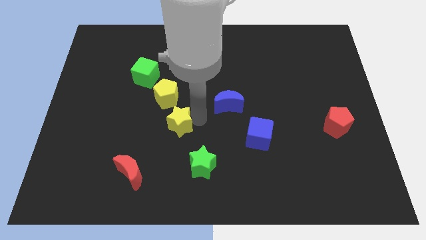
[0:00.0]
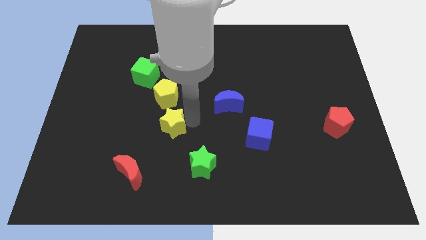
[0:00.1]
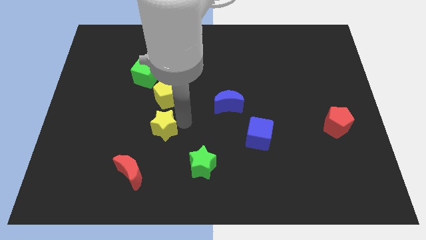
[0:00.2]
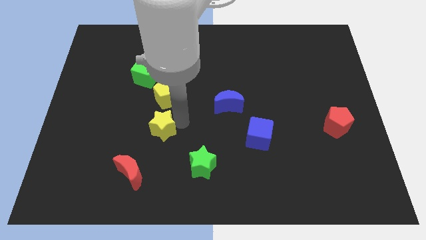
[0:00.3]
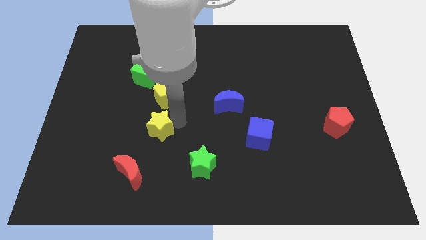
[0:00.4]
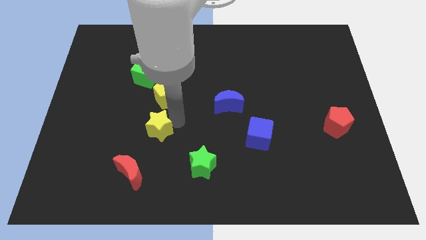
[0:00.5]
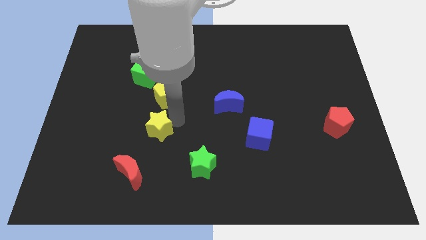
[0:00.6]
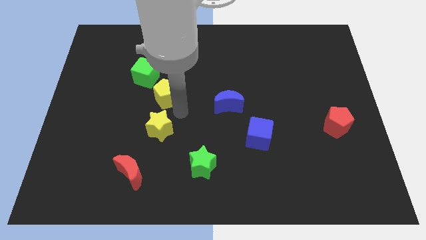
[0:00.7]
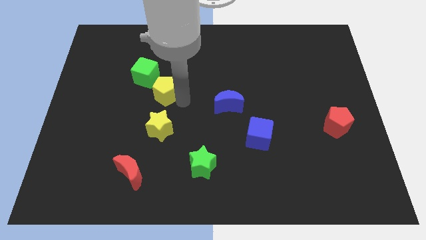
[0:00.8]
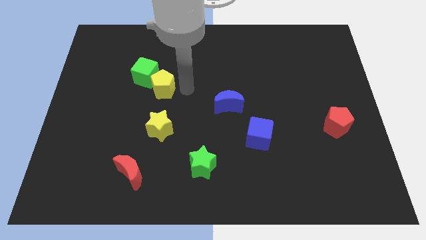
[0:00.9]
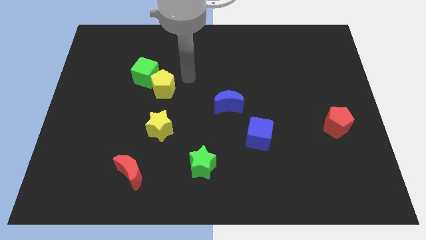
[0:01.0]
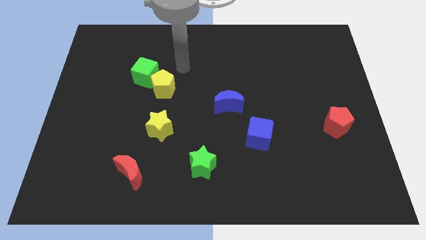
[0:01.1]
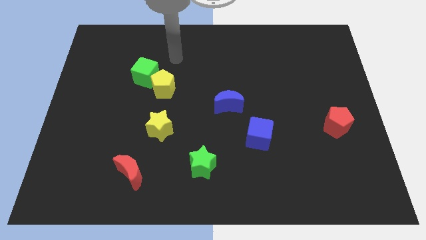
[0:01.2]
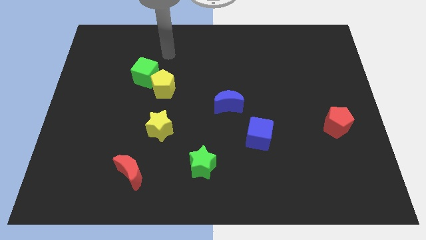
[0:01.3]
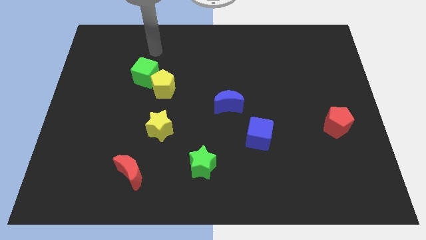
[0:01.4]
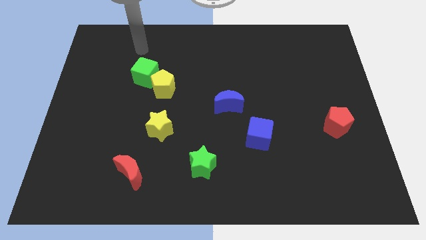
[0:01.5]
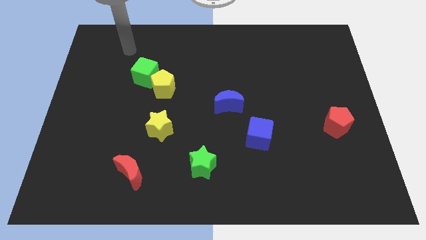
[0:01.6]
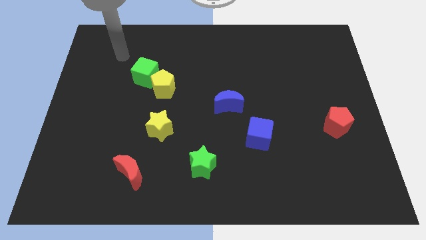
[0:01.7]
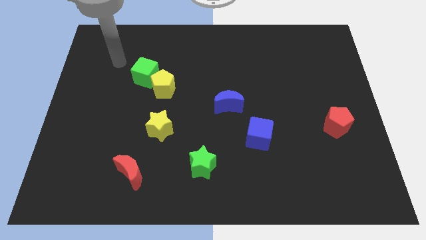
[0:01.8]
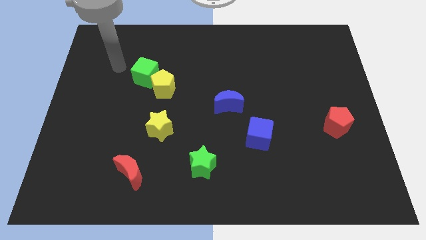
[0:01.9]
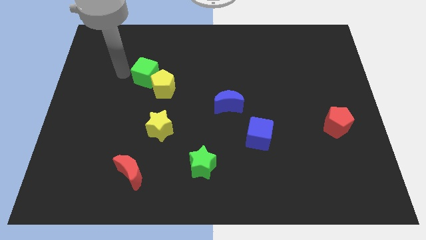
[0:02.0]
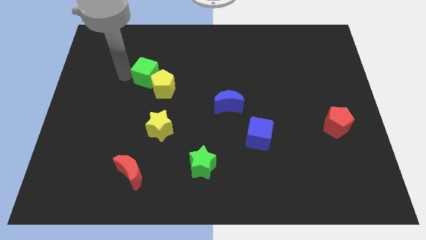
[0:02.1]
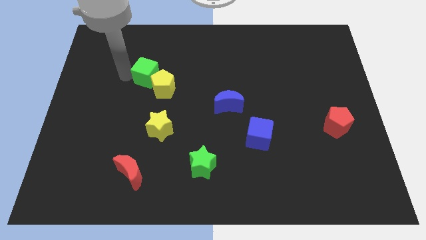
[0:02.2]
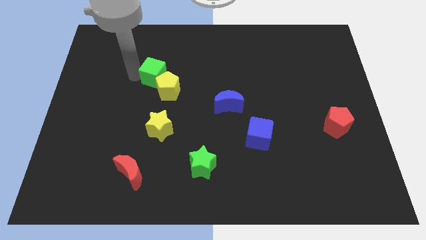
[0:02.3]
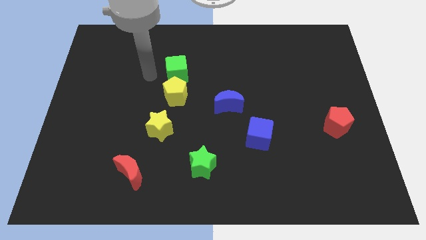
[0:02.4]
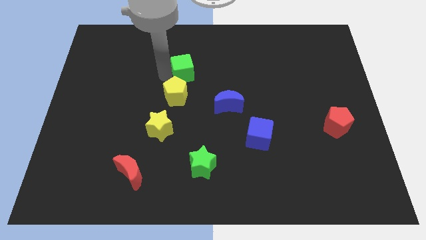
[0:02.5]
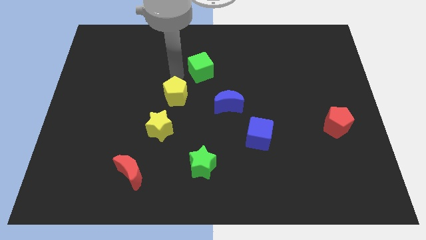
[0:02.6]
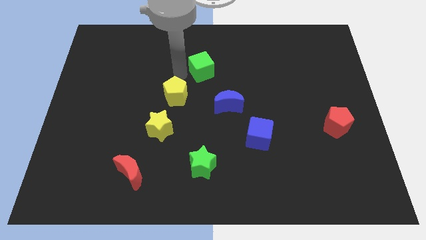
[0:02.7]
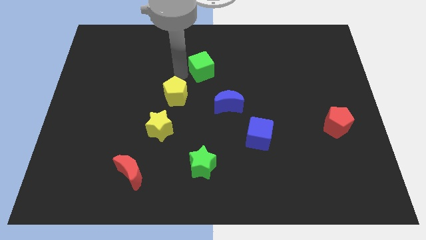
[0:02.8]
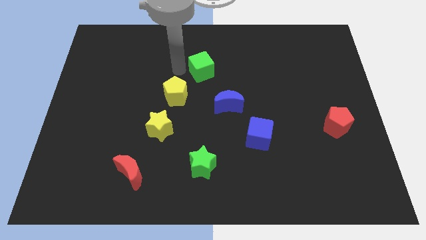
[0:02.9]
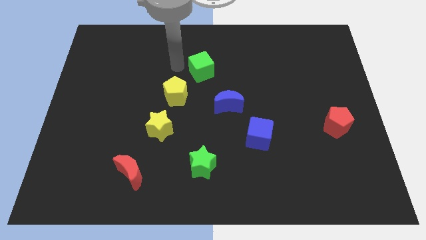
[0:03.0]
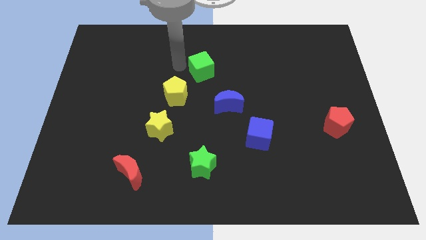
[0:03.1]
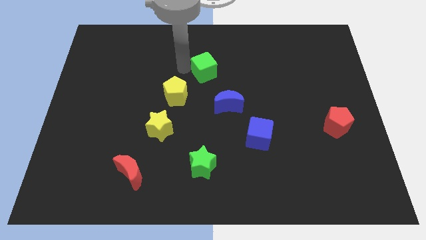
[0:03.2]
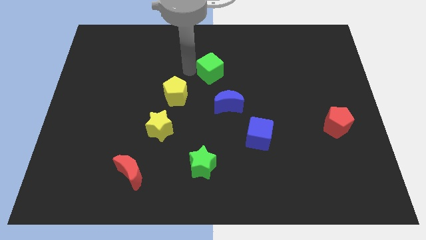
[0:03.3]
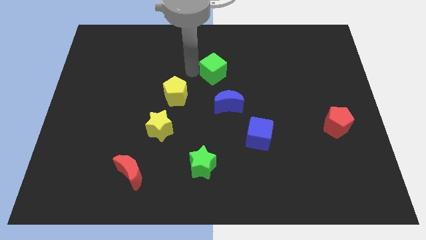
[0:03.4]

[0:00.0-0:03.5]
push the green to the right side

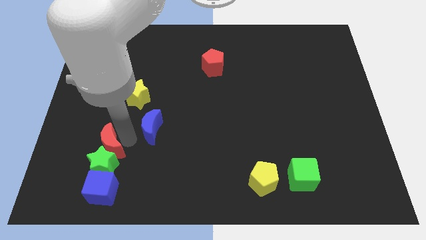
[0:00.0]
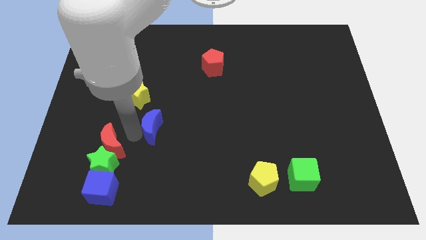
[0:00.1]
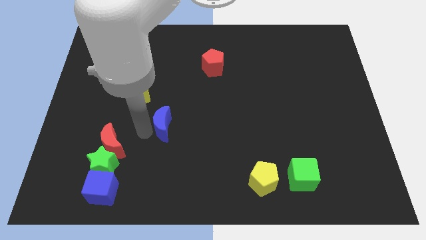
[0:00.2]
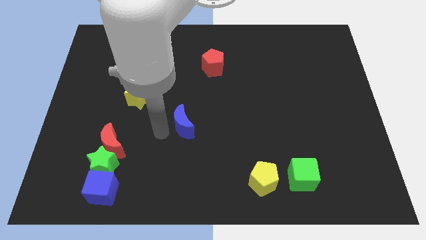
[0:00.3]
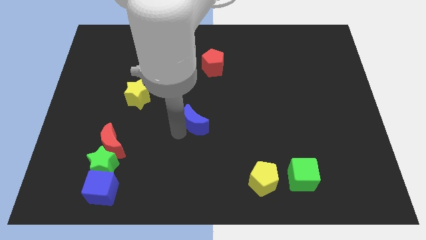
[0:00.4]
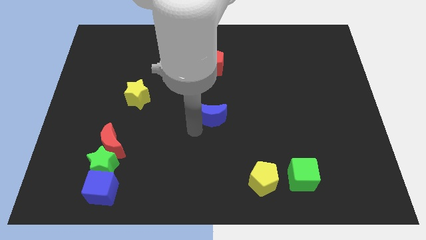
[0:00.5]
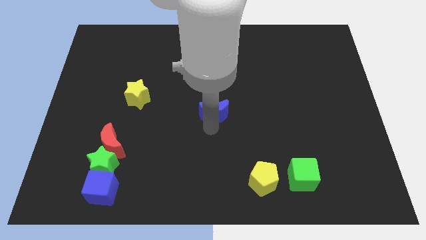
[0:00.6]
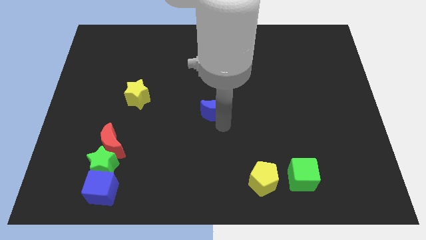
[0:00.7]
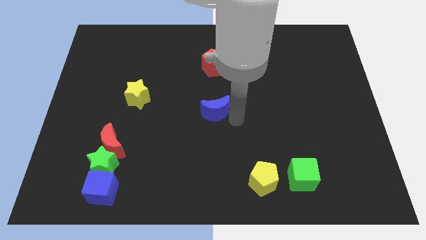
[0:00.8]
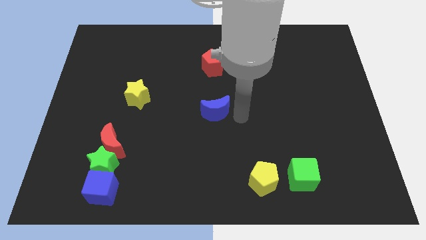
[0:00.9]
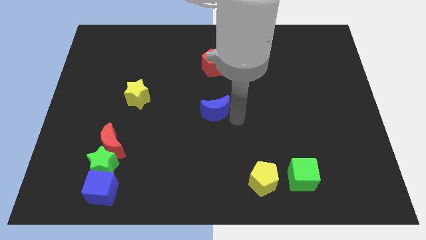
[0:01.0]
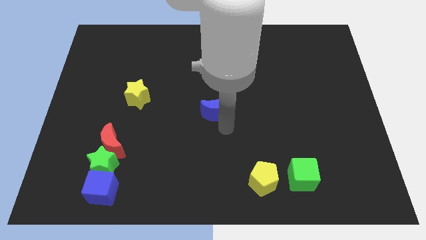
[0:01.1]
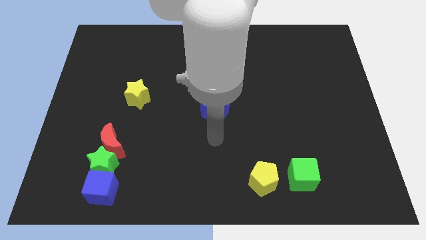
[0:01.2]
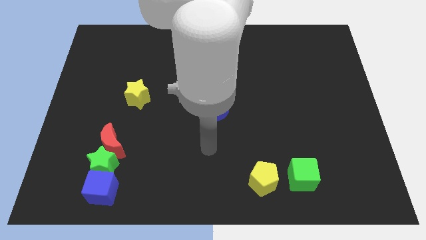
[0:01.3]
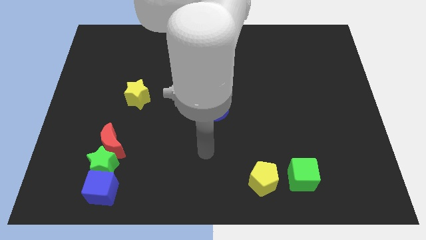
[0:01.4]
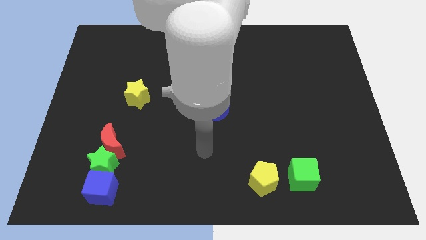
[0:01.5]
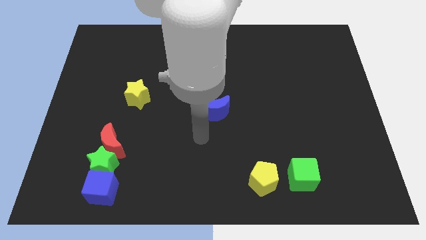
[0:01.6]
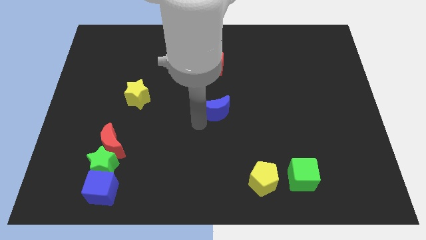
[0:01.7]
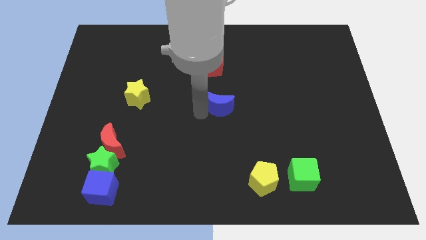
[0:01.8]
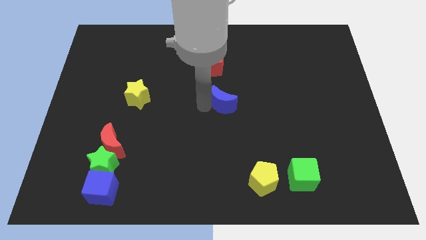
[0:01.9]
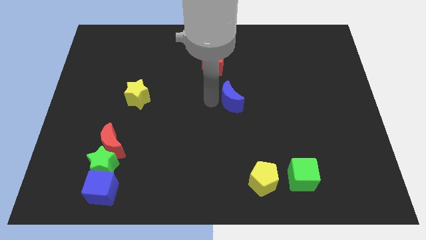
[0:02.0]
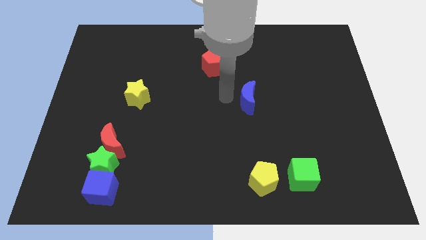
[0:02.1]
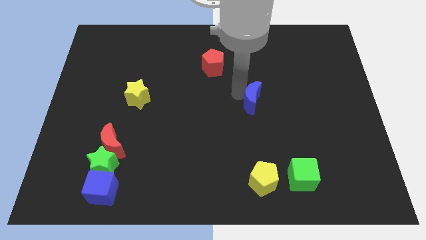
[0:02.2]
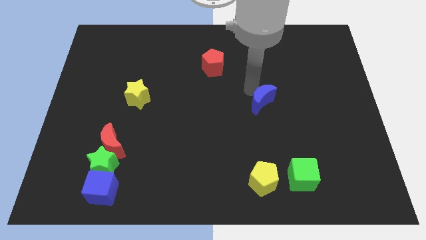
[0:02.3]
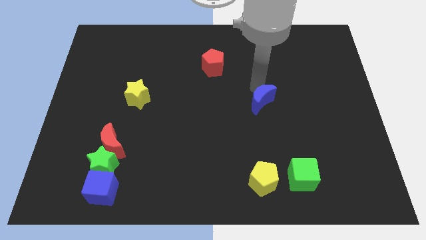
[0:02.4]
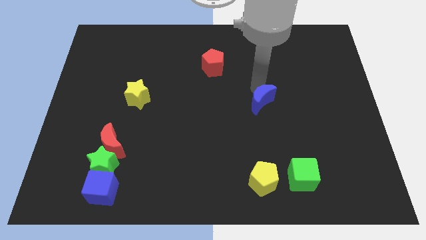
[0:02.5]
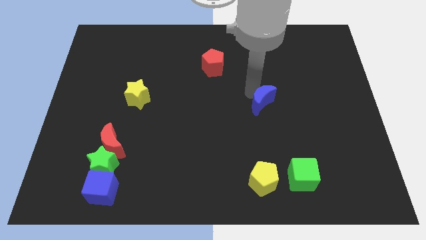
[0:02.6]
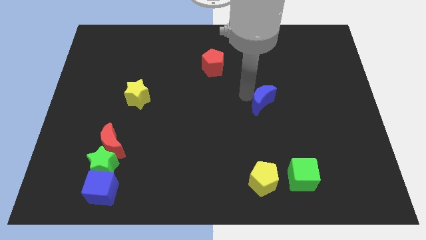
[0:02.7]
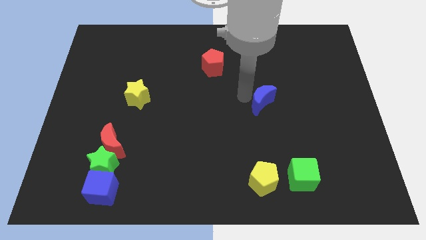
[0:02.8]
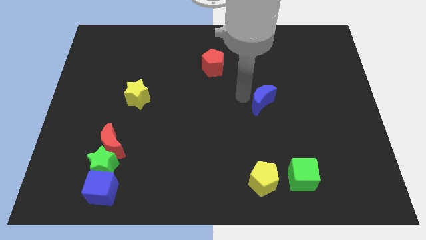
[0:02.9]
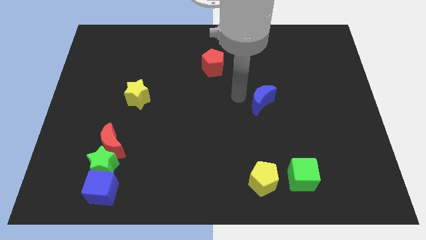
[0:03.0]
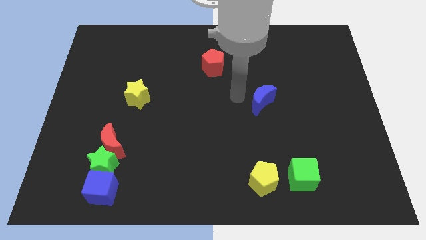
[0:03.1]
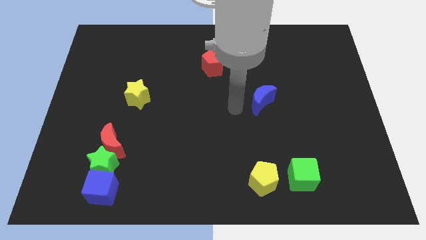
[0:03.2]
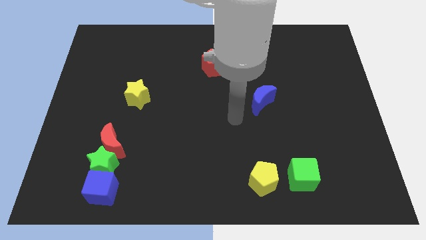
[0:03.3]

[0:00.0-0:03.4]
move the blue crescent above the yellow pentagon

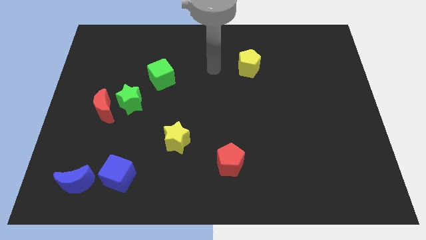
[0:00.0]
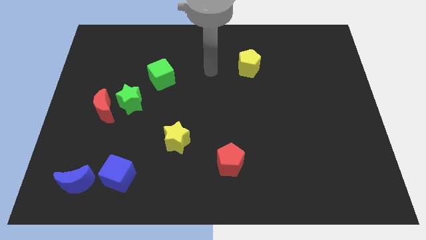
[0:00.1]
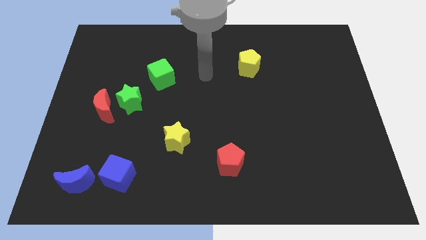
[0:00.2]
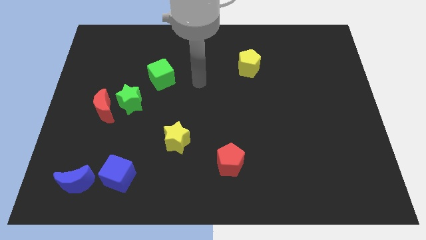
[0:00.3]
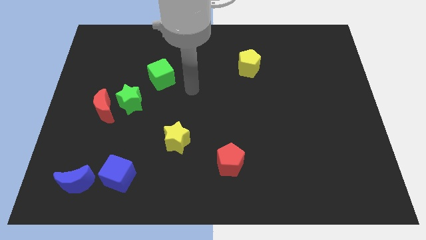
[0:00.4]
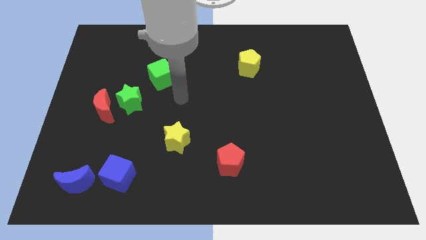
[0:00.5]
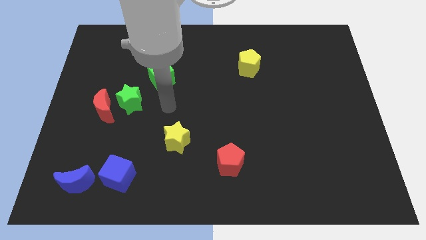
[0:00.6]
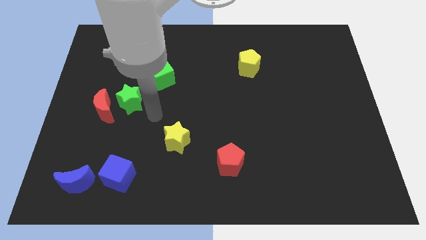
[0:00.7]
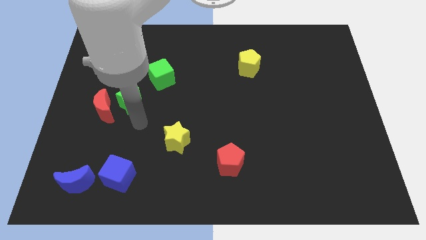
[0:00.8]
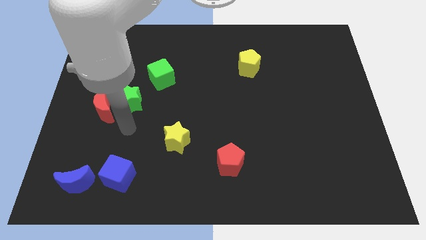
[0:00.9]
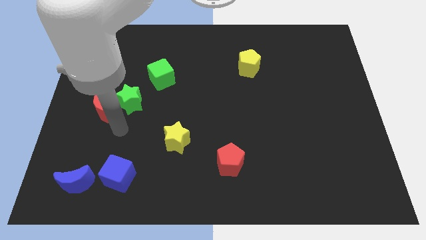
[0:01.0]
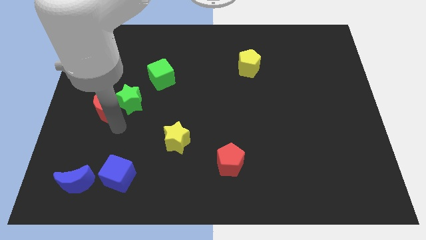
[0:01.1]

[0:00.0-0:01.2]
move your arm towards the red crescent

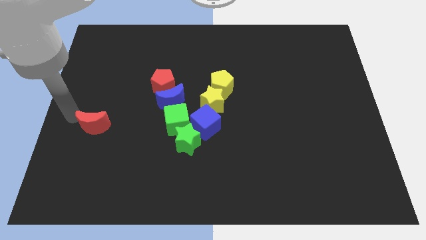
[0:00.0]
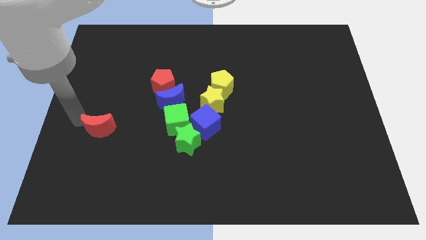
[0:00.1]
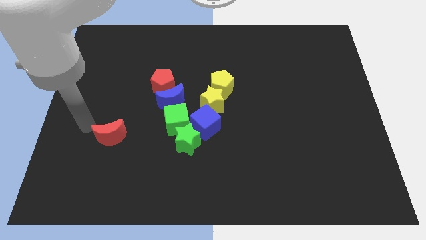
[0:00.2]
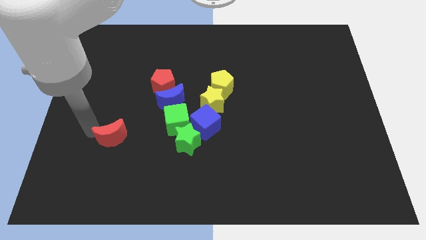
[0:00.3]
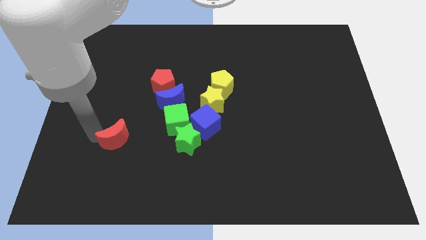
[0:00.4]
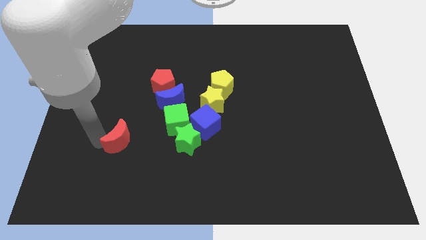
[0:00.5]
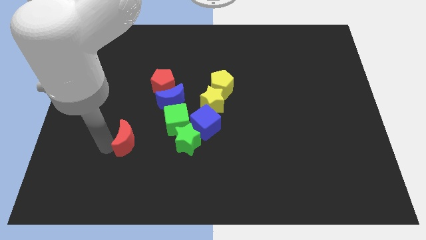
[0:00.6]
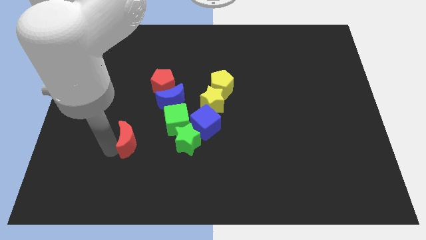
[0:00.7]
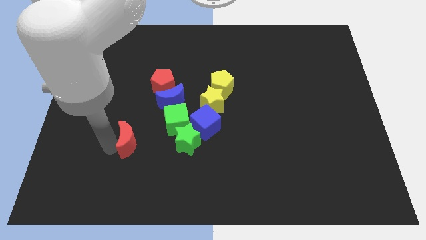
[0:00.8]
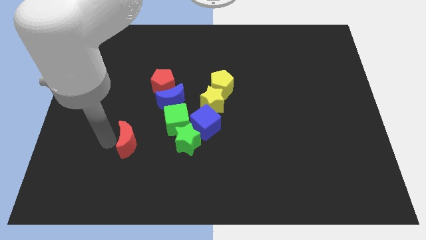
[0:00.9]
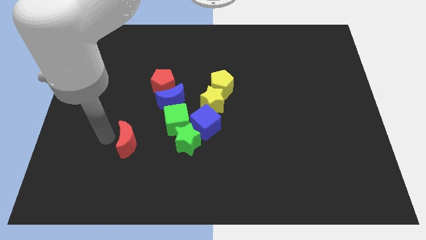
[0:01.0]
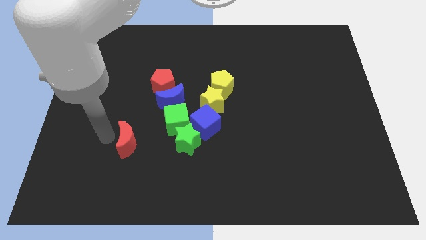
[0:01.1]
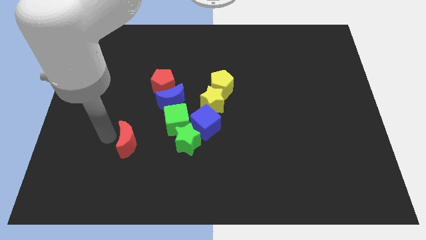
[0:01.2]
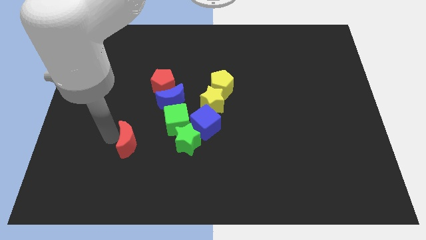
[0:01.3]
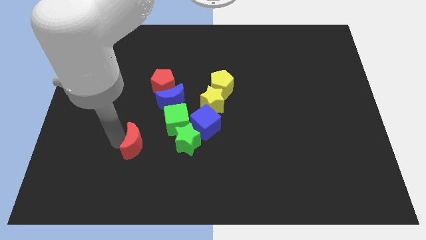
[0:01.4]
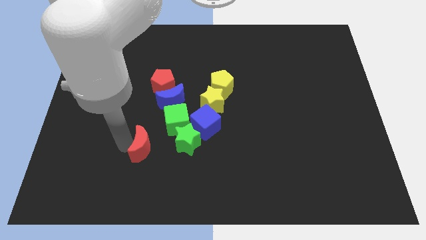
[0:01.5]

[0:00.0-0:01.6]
place the red moon left to the green star
